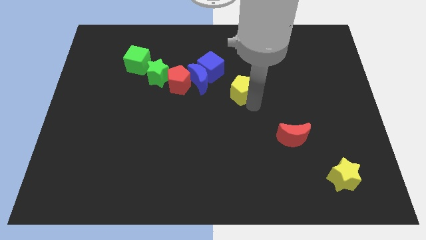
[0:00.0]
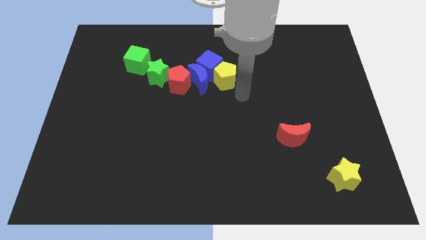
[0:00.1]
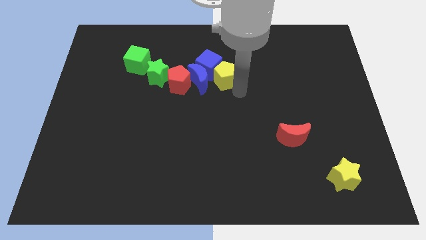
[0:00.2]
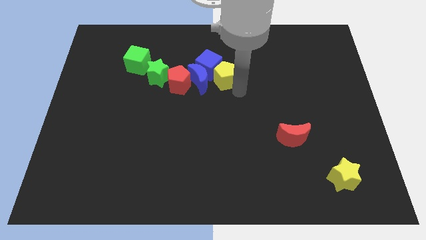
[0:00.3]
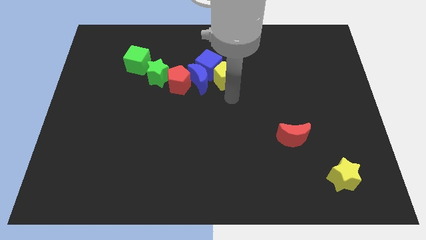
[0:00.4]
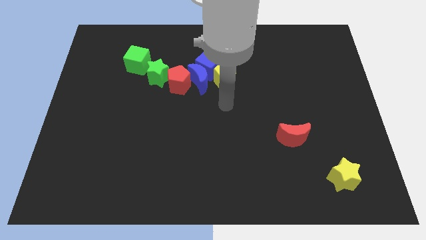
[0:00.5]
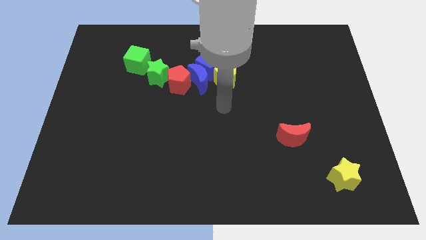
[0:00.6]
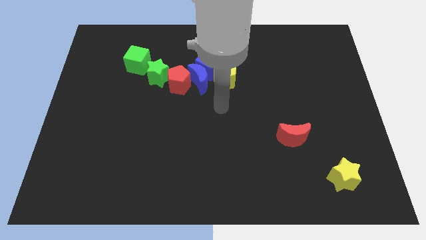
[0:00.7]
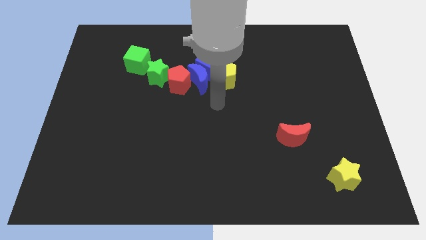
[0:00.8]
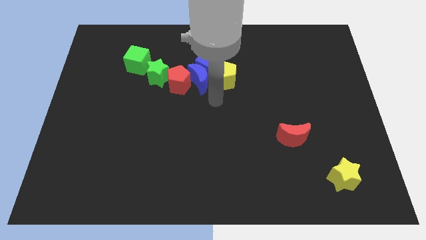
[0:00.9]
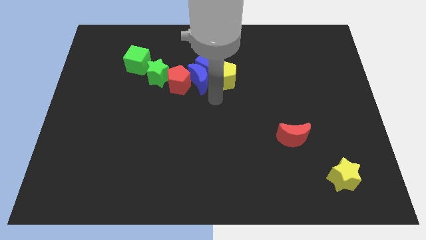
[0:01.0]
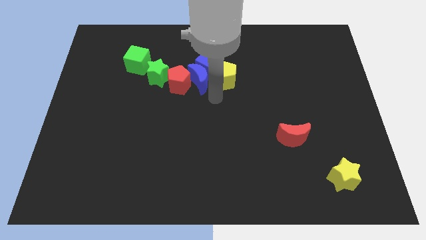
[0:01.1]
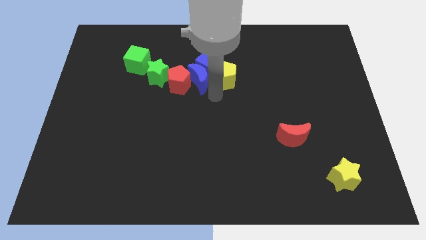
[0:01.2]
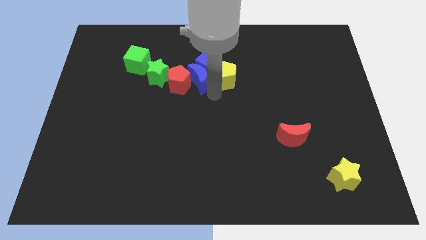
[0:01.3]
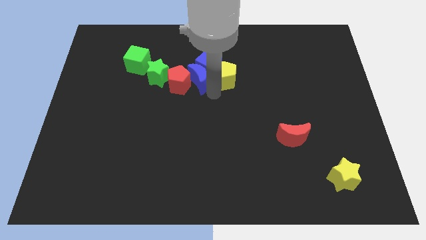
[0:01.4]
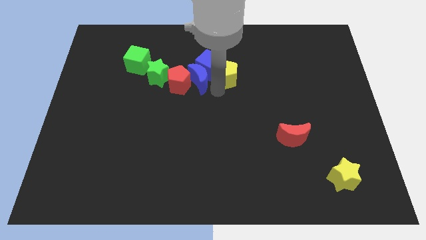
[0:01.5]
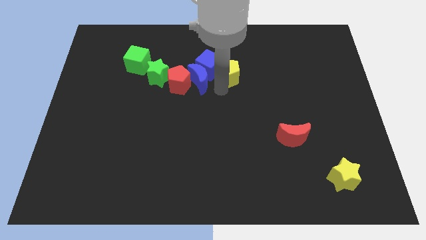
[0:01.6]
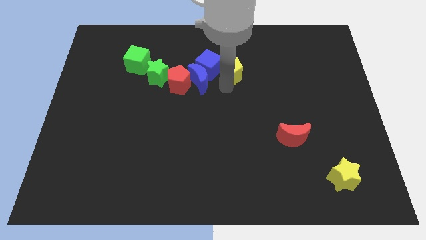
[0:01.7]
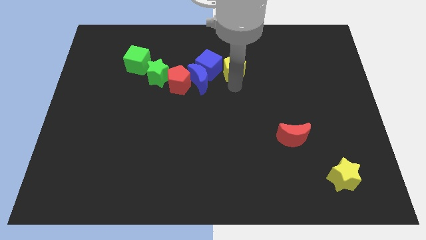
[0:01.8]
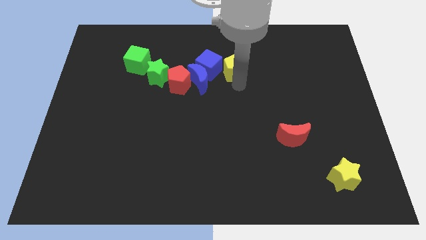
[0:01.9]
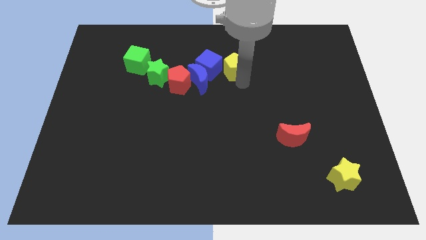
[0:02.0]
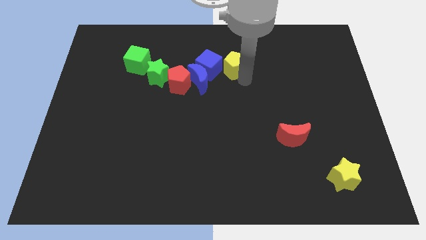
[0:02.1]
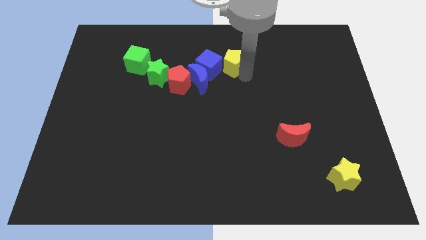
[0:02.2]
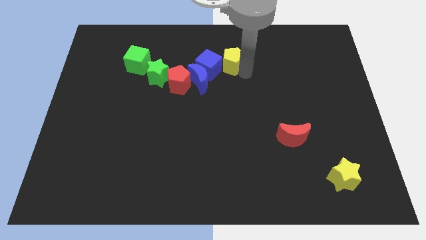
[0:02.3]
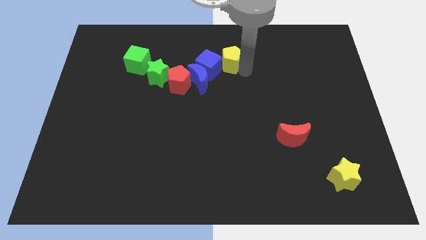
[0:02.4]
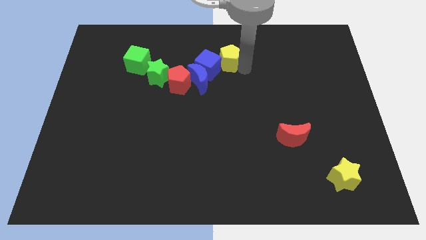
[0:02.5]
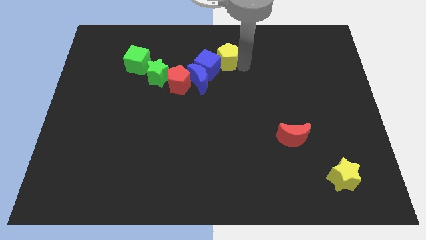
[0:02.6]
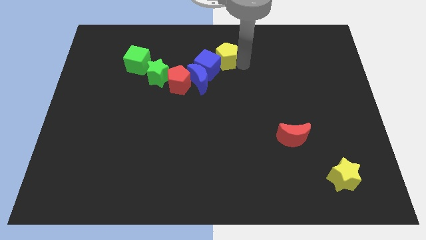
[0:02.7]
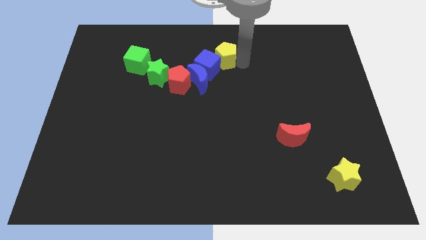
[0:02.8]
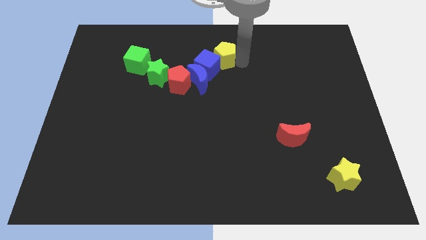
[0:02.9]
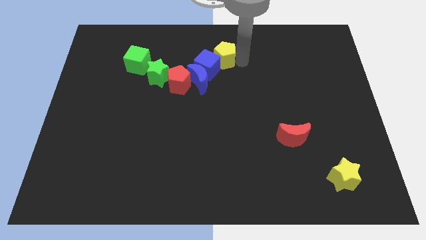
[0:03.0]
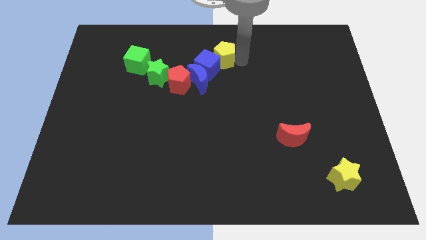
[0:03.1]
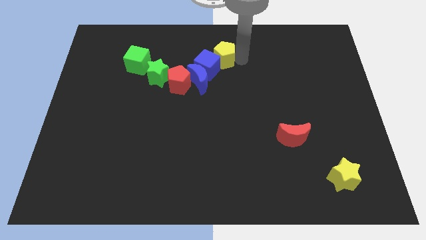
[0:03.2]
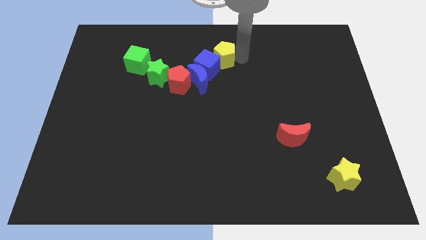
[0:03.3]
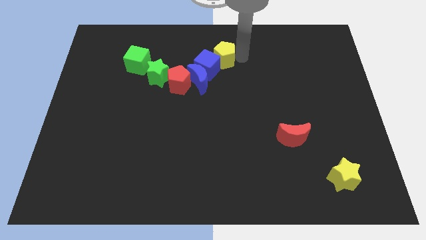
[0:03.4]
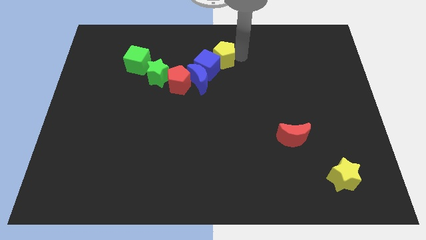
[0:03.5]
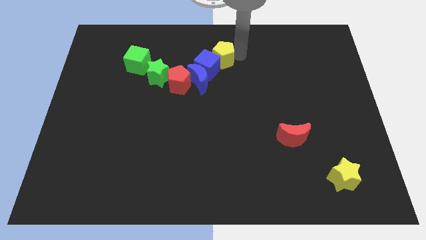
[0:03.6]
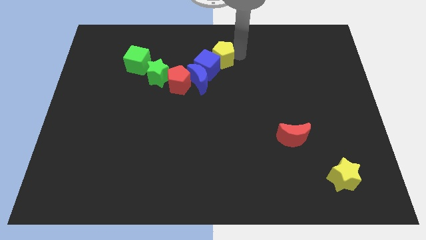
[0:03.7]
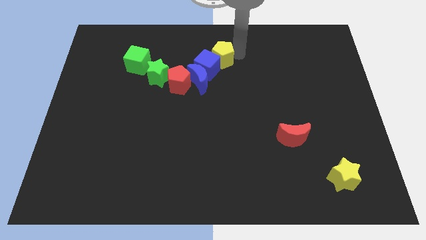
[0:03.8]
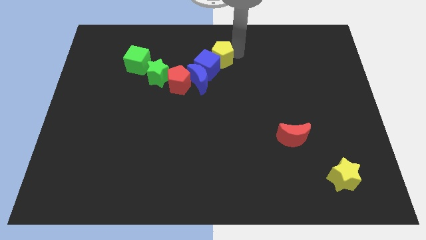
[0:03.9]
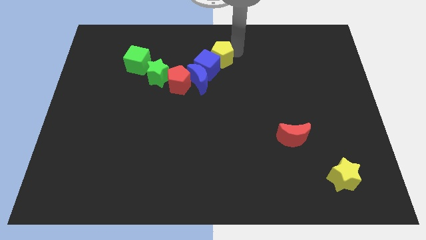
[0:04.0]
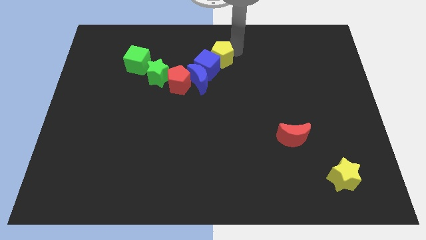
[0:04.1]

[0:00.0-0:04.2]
push yellow pentagon to the top of blue cube

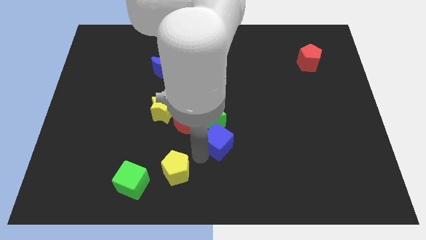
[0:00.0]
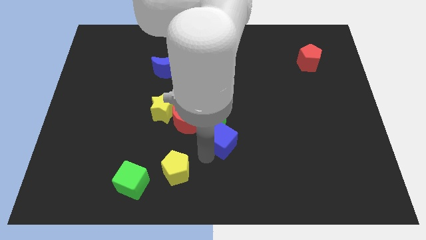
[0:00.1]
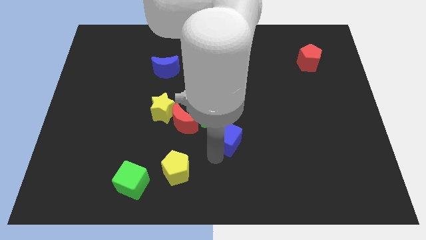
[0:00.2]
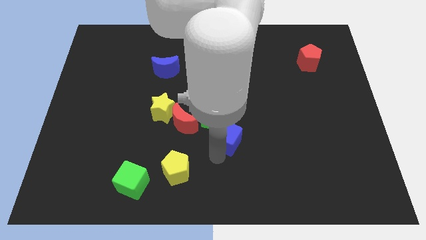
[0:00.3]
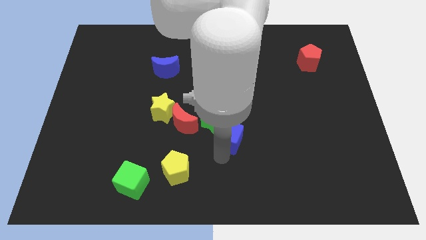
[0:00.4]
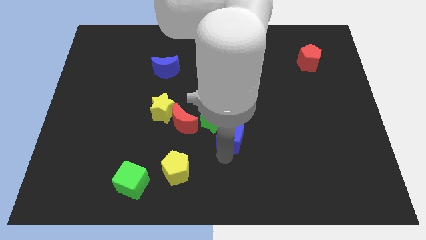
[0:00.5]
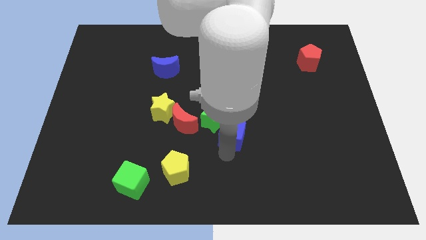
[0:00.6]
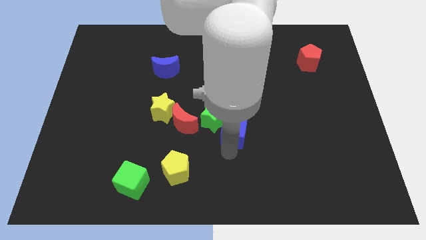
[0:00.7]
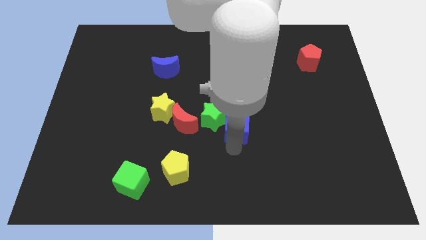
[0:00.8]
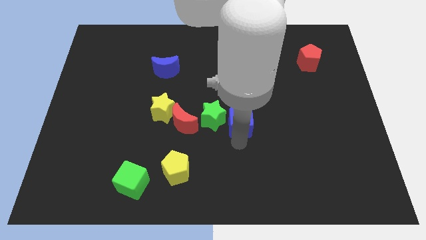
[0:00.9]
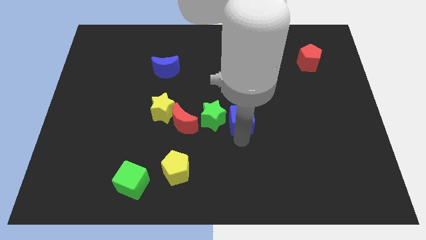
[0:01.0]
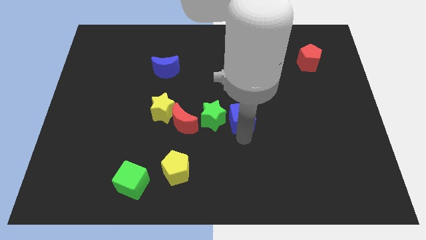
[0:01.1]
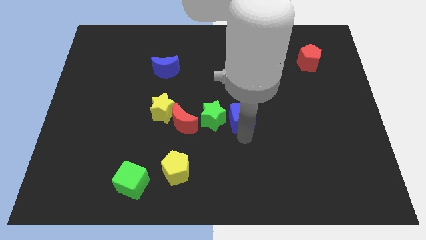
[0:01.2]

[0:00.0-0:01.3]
put the blue cube to the right of the green star

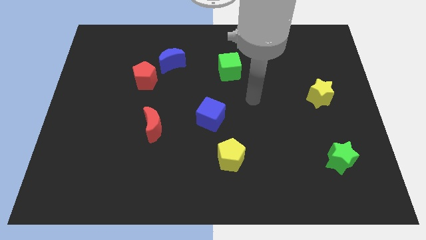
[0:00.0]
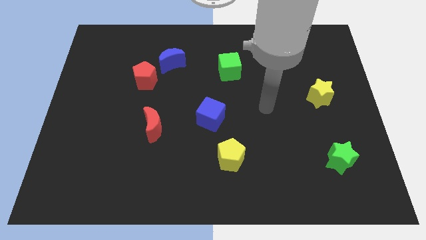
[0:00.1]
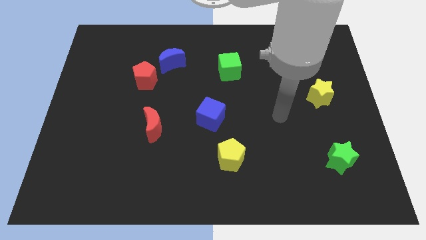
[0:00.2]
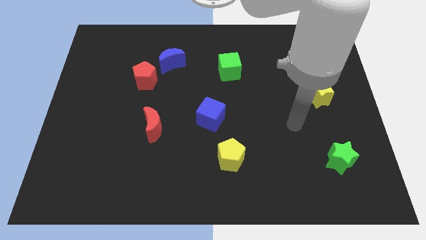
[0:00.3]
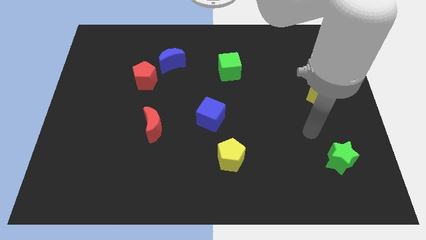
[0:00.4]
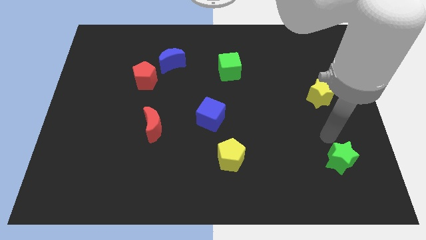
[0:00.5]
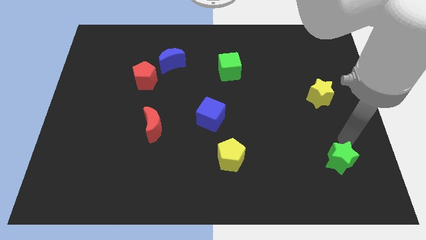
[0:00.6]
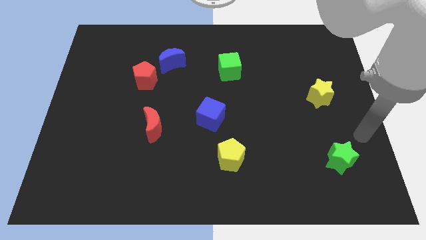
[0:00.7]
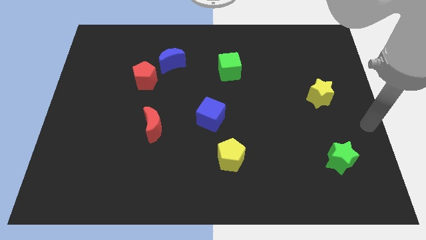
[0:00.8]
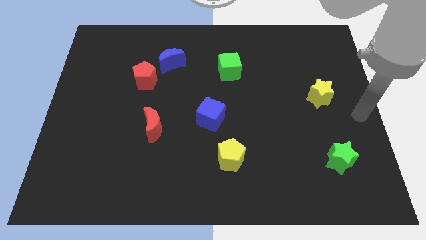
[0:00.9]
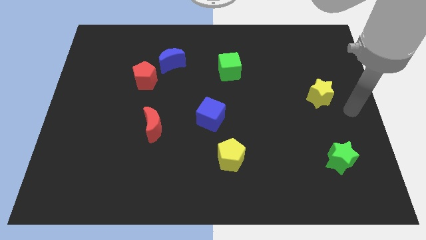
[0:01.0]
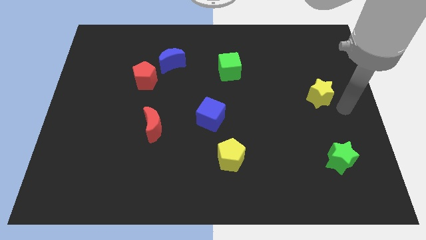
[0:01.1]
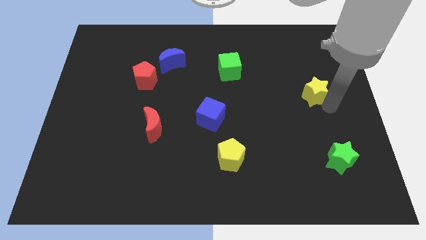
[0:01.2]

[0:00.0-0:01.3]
move your arm towards the yellow star

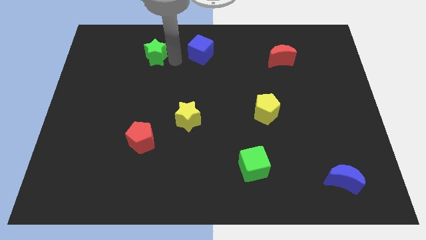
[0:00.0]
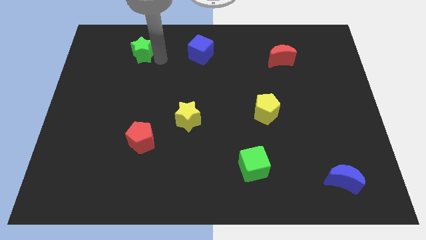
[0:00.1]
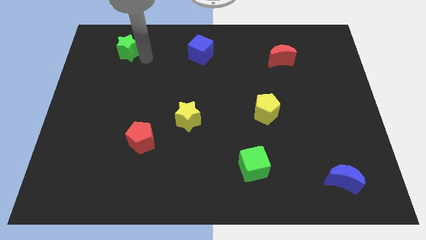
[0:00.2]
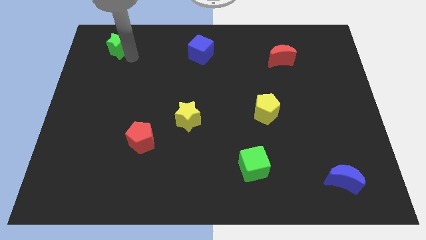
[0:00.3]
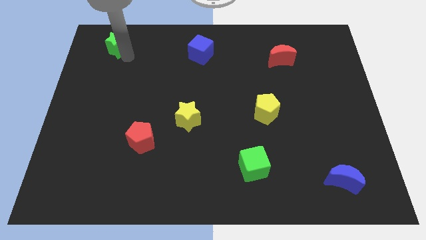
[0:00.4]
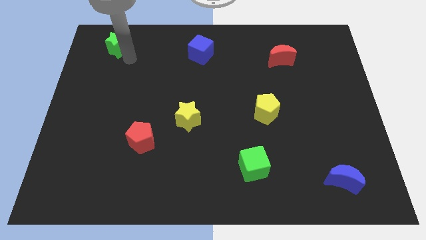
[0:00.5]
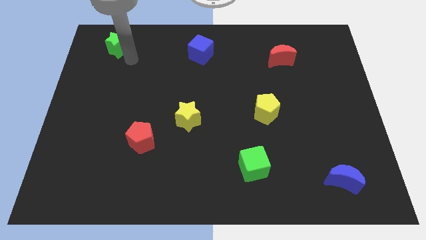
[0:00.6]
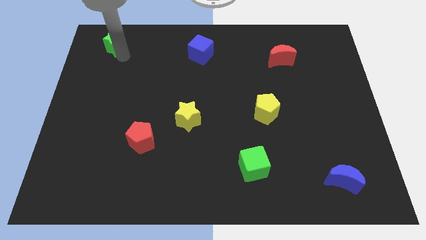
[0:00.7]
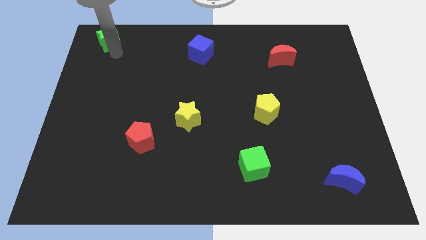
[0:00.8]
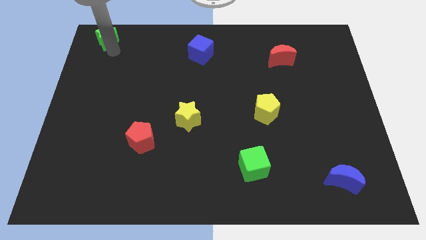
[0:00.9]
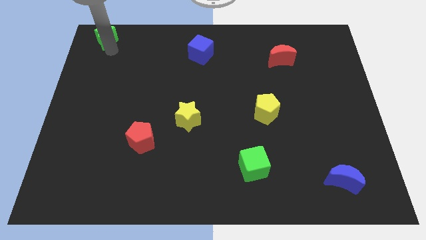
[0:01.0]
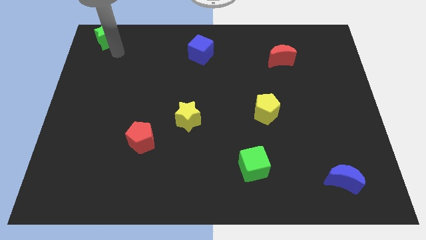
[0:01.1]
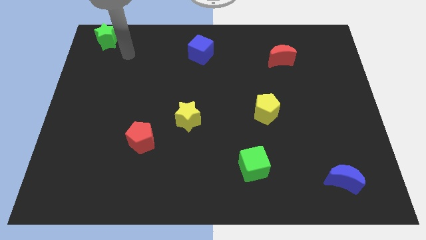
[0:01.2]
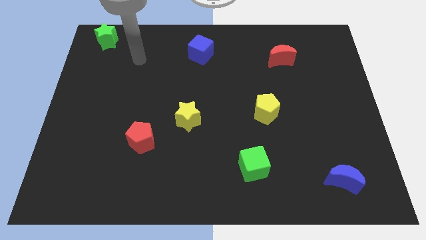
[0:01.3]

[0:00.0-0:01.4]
move green star to the top left corner of the board

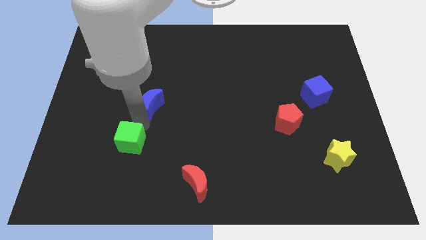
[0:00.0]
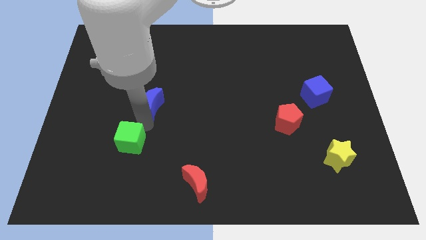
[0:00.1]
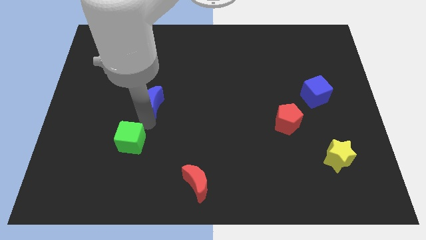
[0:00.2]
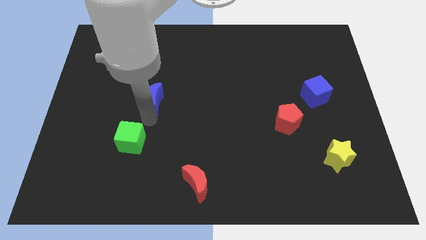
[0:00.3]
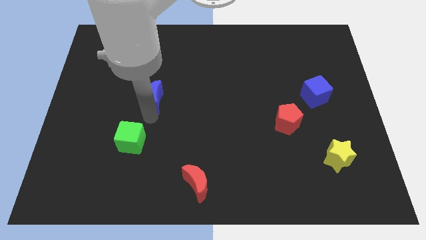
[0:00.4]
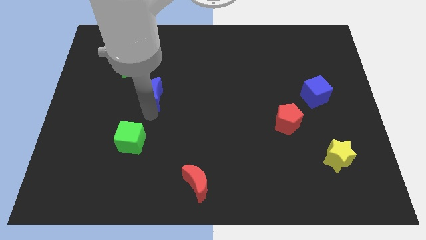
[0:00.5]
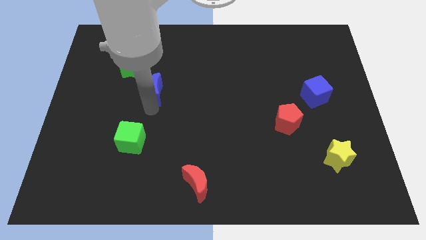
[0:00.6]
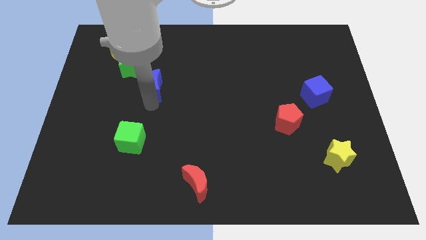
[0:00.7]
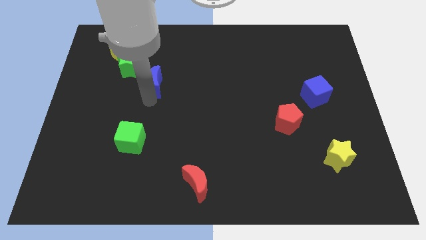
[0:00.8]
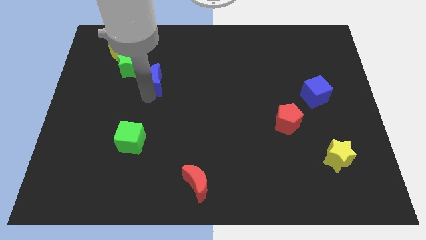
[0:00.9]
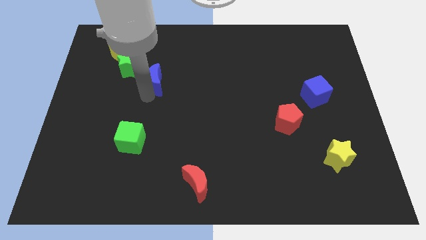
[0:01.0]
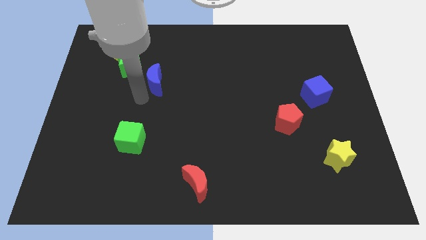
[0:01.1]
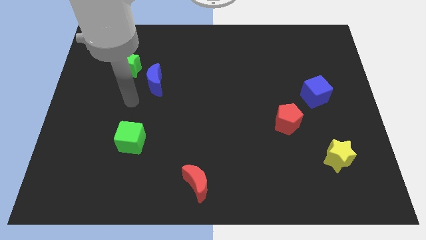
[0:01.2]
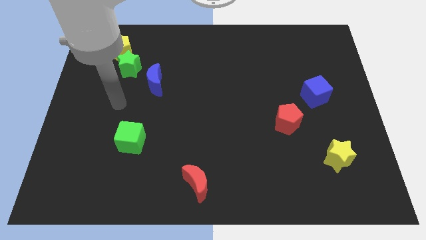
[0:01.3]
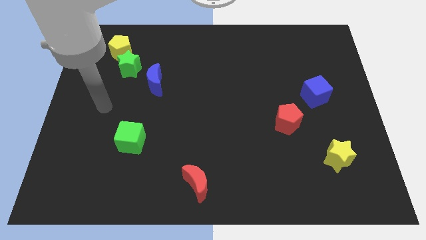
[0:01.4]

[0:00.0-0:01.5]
slide the blue moon to the top side of the board
